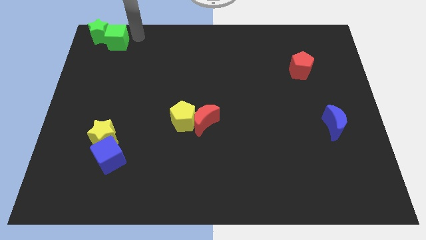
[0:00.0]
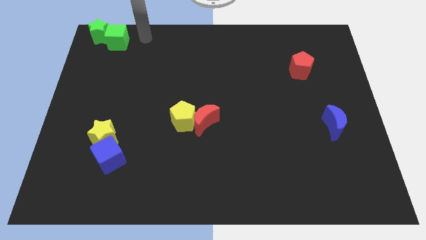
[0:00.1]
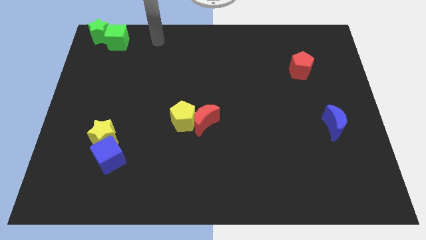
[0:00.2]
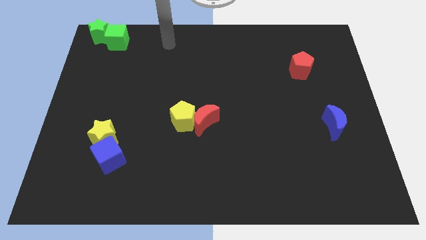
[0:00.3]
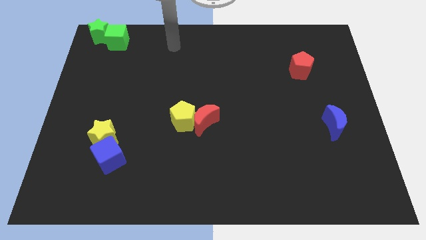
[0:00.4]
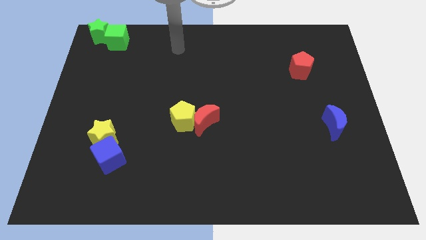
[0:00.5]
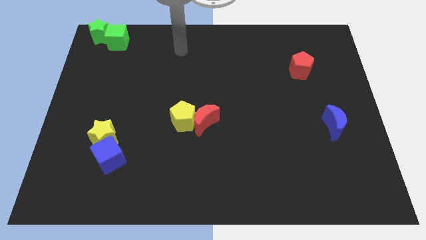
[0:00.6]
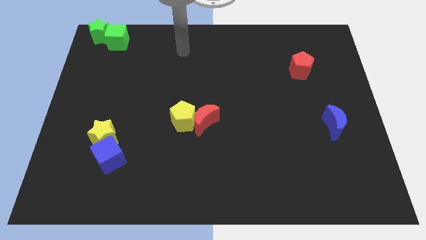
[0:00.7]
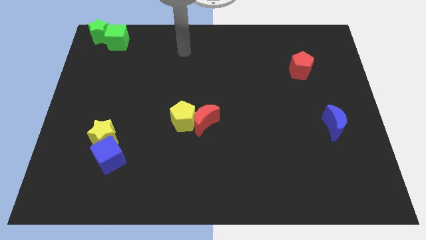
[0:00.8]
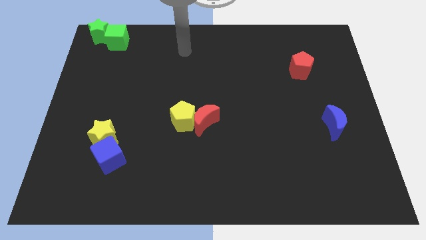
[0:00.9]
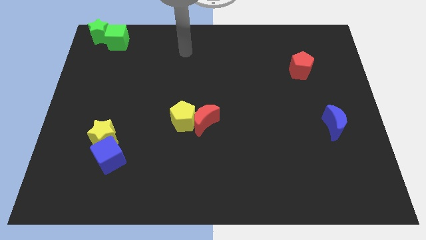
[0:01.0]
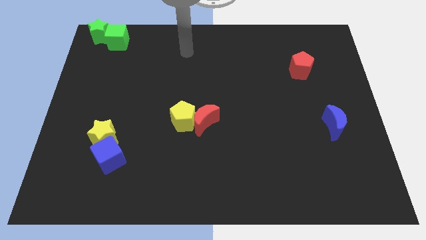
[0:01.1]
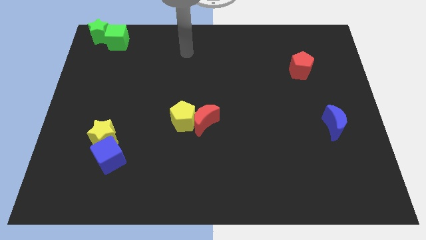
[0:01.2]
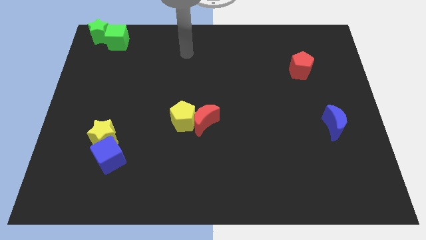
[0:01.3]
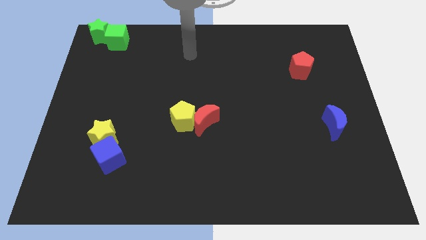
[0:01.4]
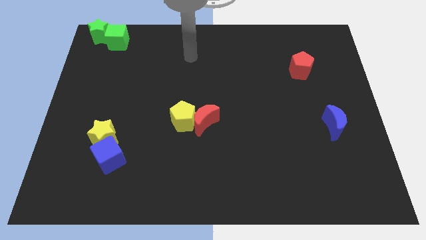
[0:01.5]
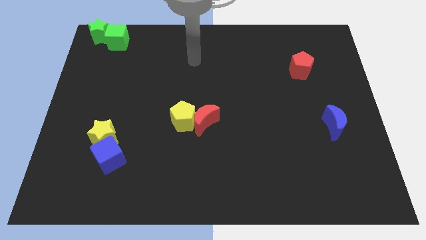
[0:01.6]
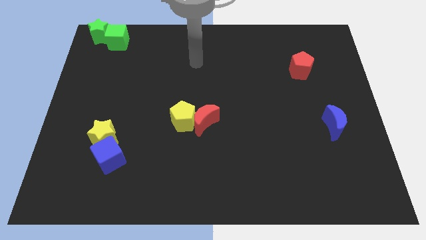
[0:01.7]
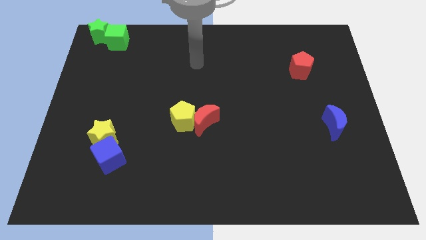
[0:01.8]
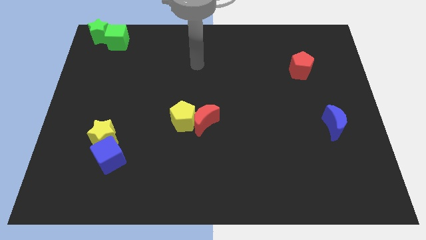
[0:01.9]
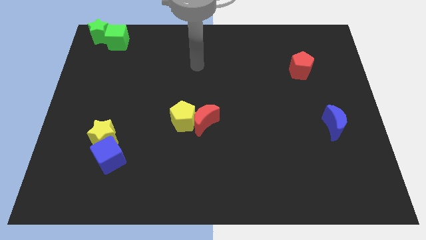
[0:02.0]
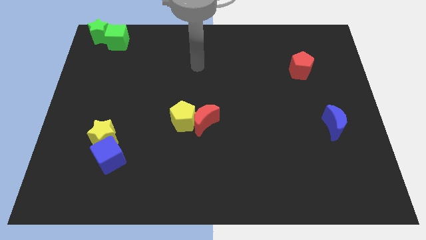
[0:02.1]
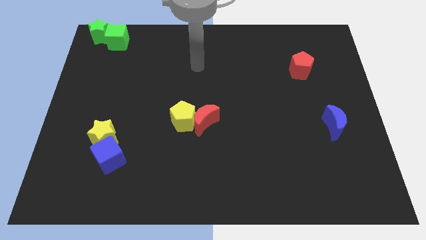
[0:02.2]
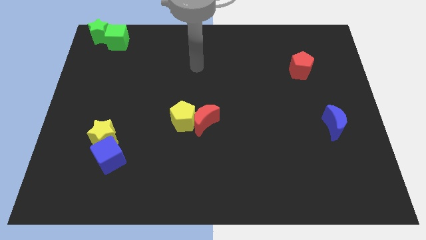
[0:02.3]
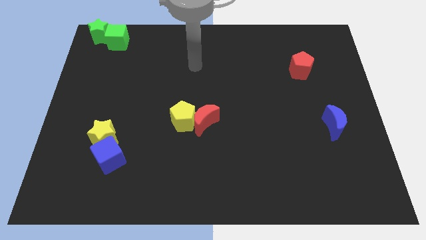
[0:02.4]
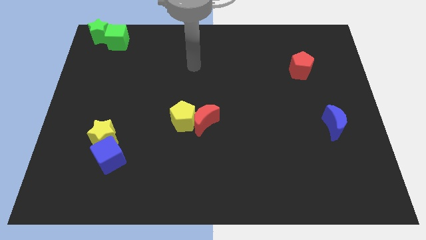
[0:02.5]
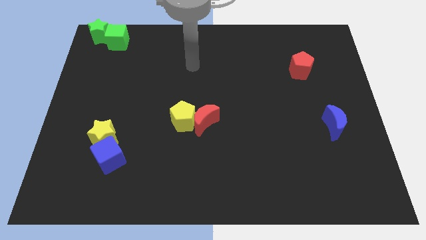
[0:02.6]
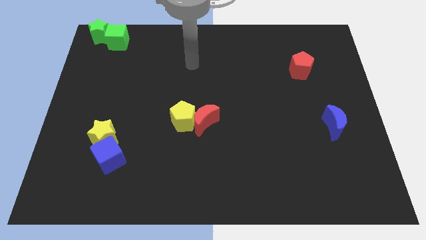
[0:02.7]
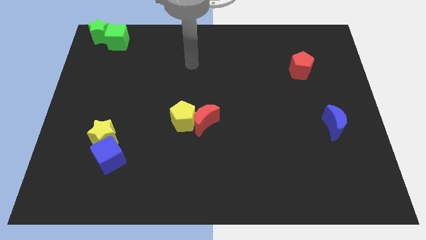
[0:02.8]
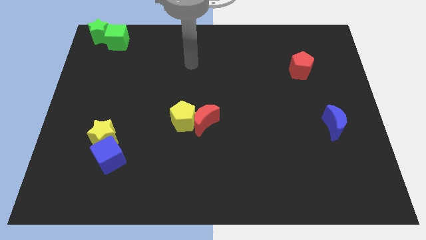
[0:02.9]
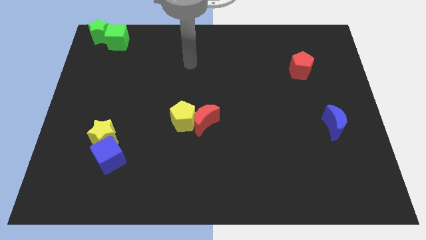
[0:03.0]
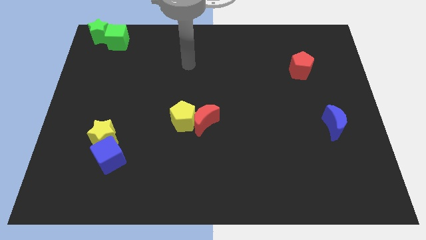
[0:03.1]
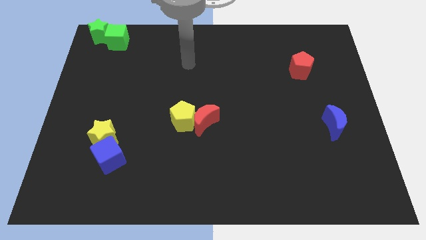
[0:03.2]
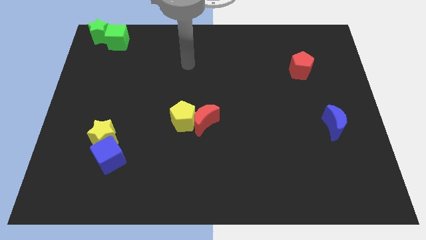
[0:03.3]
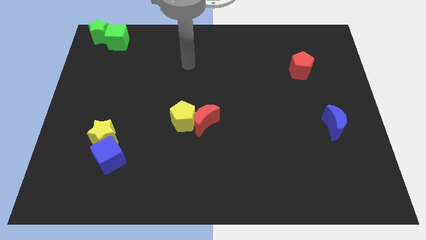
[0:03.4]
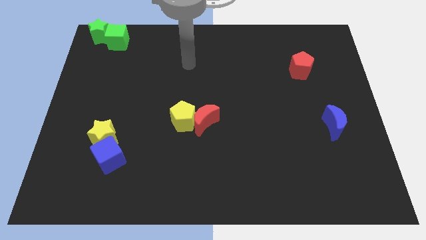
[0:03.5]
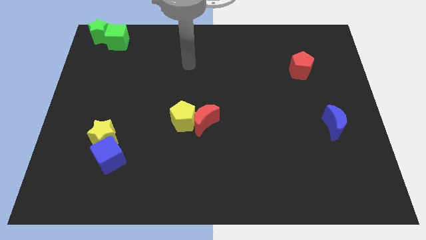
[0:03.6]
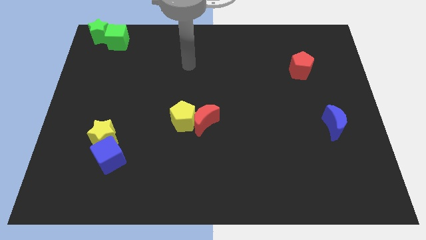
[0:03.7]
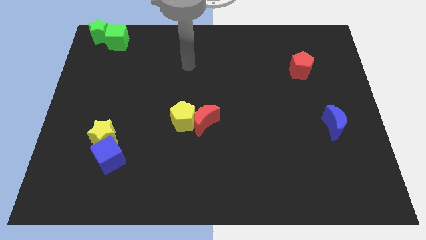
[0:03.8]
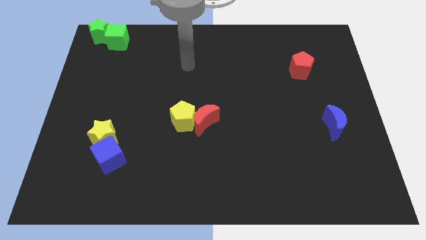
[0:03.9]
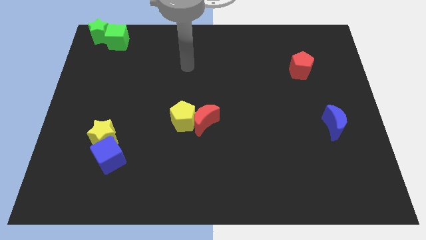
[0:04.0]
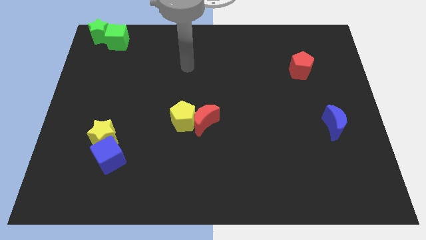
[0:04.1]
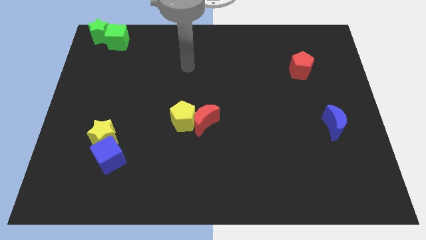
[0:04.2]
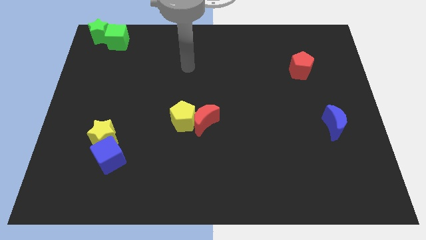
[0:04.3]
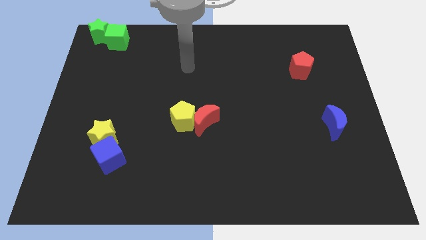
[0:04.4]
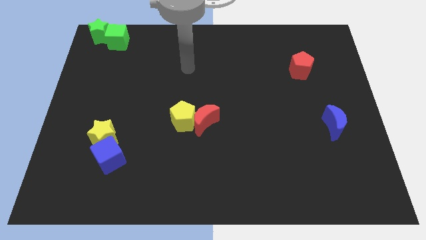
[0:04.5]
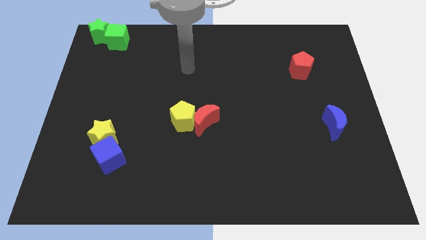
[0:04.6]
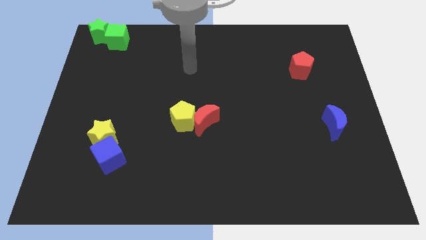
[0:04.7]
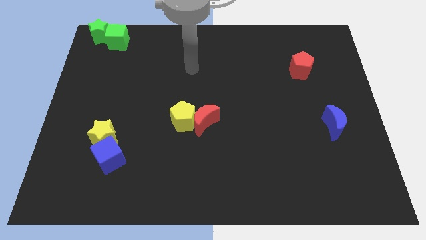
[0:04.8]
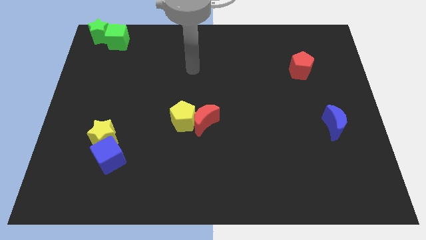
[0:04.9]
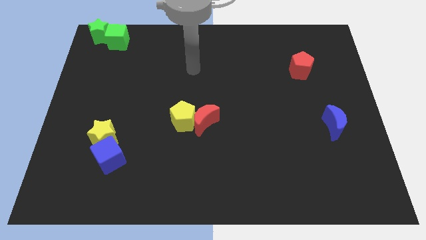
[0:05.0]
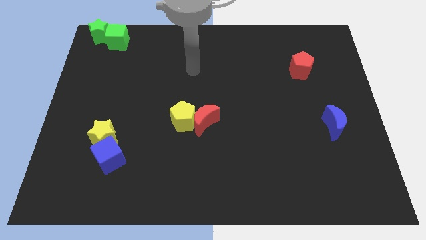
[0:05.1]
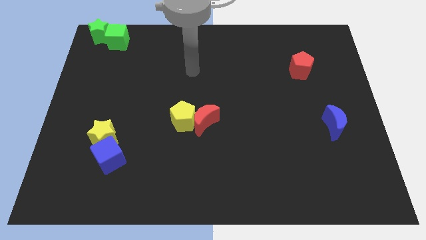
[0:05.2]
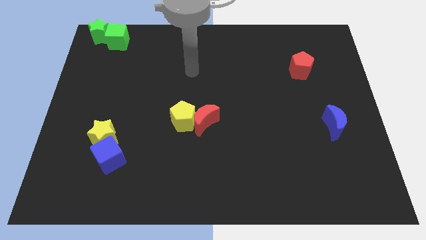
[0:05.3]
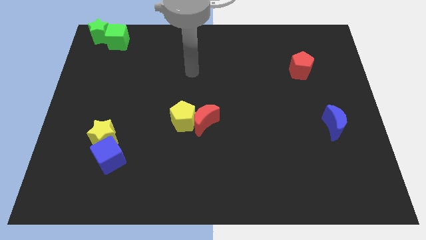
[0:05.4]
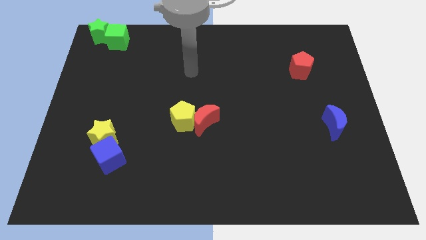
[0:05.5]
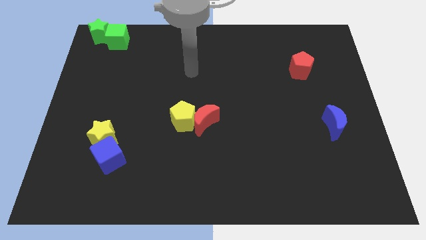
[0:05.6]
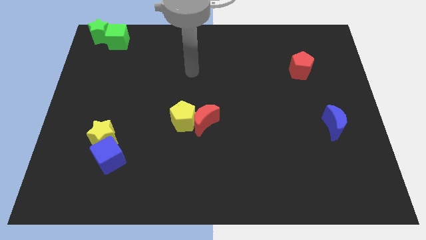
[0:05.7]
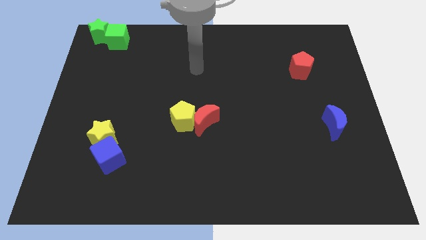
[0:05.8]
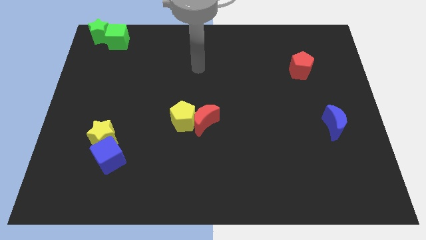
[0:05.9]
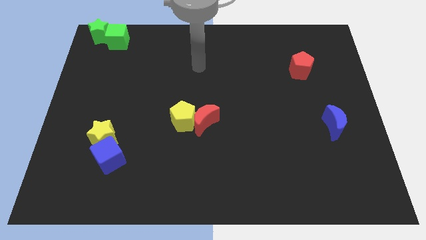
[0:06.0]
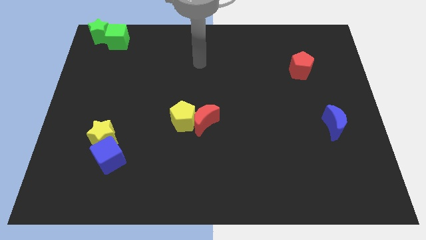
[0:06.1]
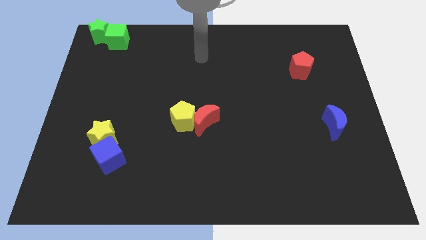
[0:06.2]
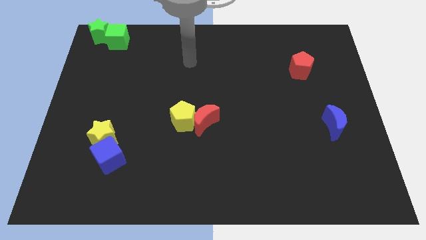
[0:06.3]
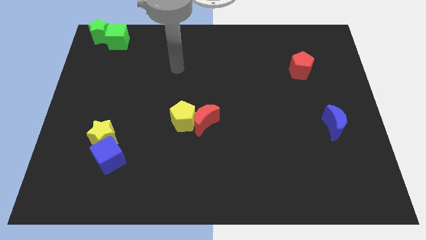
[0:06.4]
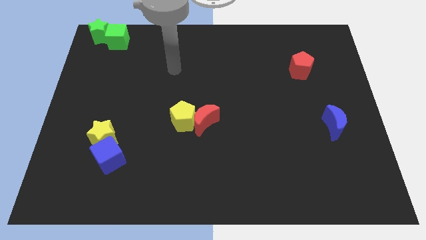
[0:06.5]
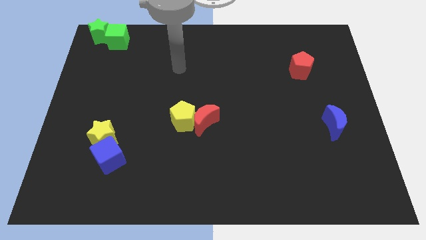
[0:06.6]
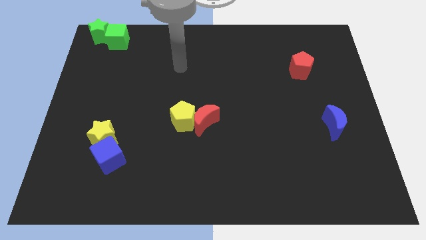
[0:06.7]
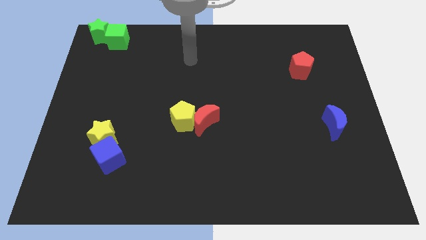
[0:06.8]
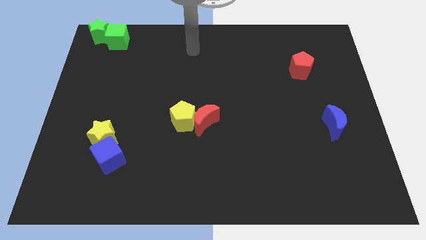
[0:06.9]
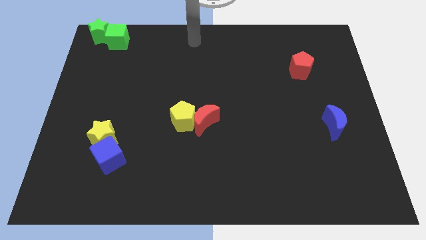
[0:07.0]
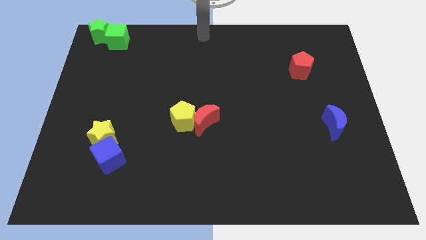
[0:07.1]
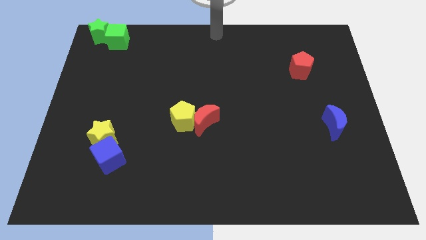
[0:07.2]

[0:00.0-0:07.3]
place your arm at the top center of the board

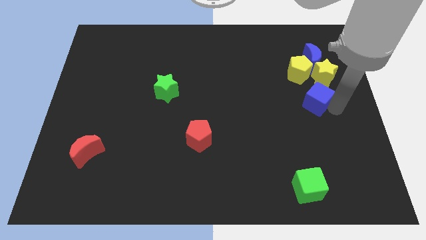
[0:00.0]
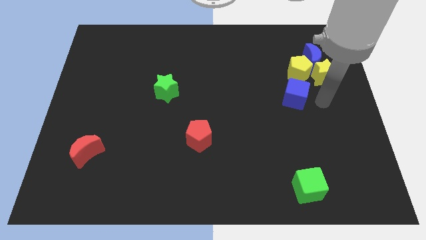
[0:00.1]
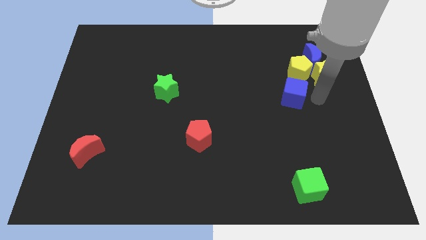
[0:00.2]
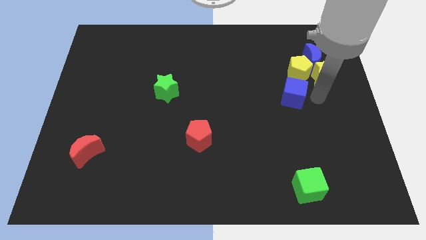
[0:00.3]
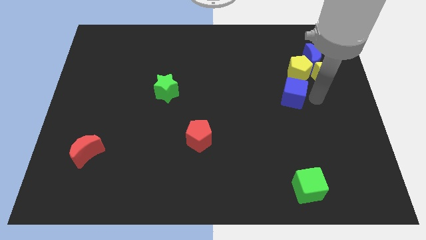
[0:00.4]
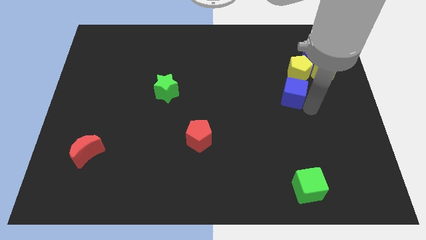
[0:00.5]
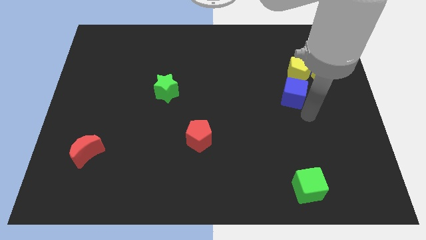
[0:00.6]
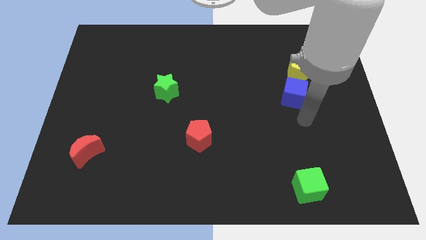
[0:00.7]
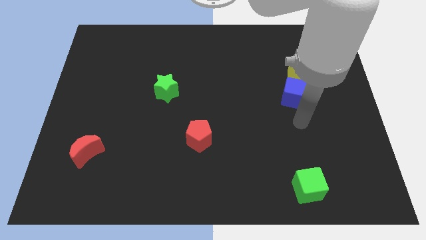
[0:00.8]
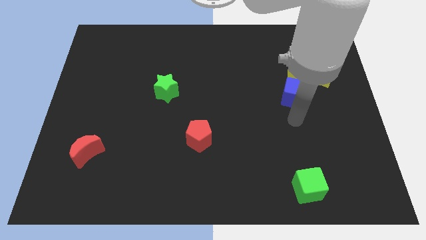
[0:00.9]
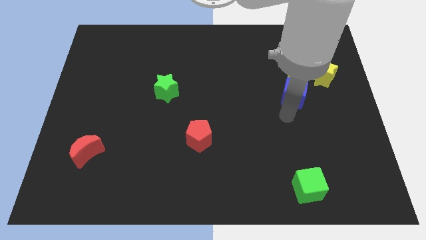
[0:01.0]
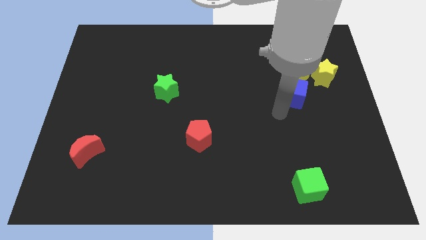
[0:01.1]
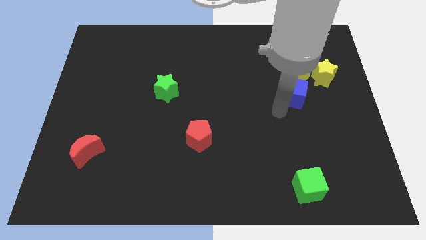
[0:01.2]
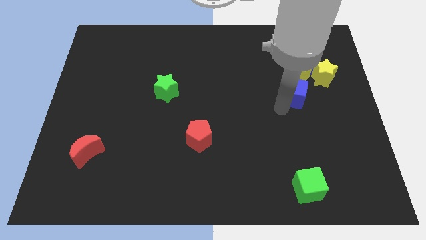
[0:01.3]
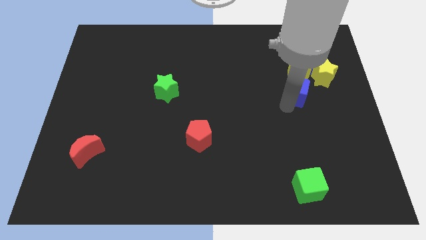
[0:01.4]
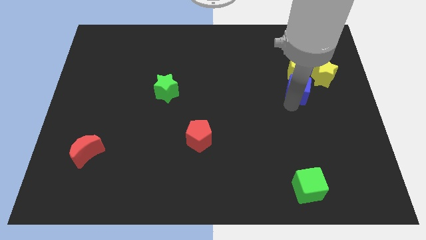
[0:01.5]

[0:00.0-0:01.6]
place the blue cube below the yellow pentagon

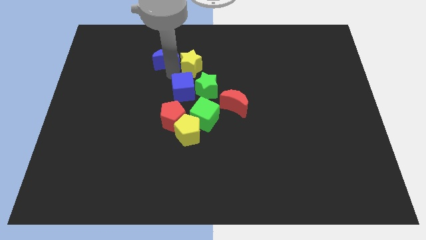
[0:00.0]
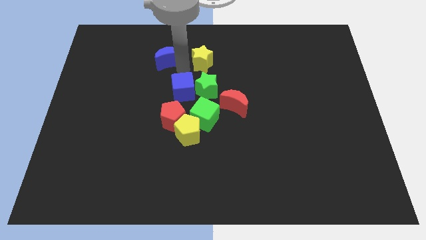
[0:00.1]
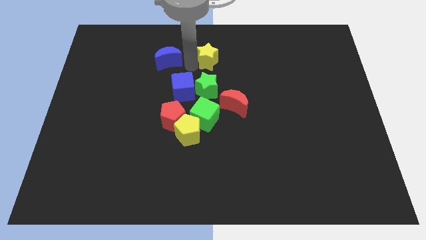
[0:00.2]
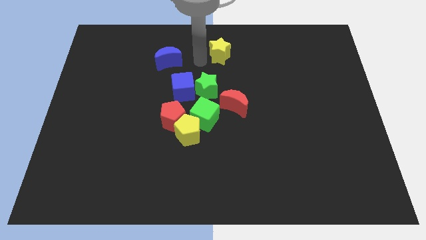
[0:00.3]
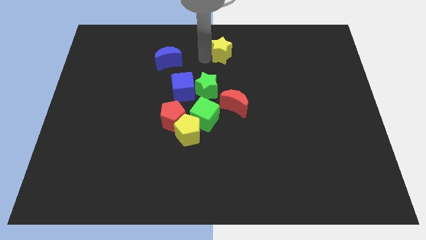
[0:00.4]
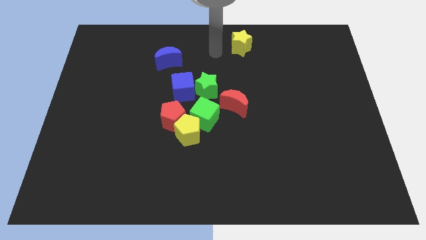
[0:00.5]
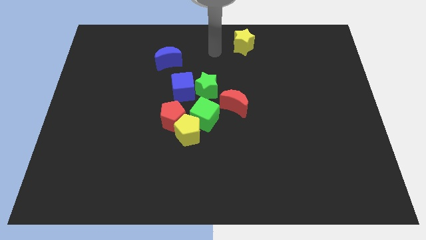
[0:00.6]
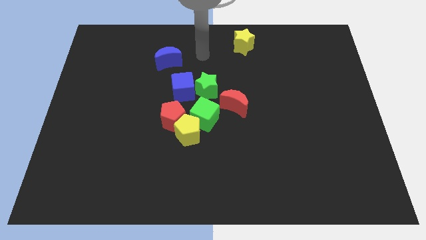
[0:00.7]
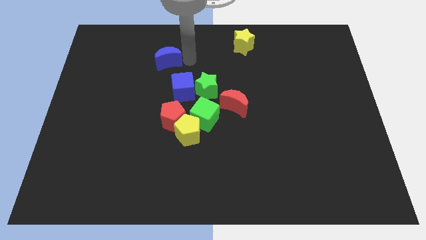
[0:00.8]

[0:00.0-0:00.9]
separate the yellow star from the blue semicircle
